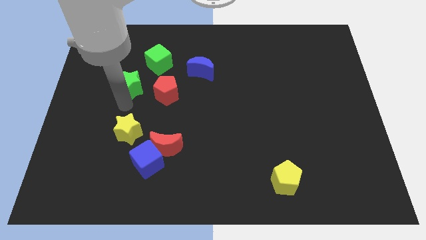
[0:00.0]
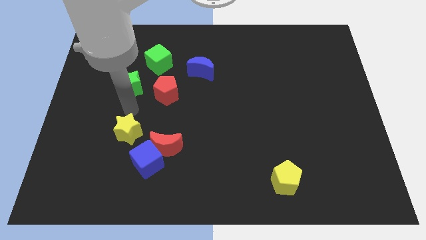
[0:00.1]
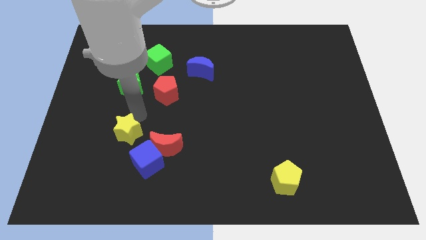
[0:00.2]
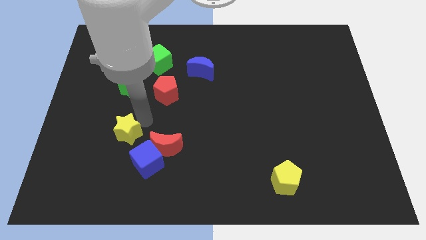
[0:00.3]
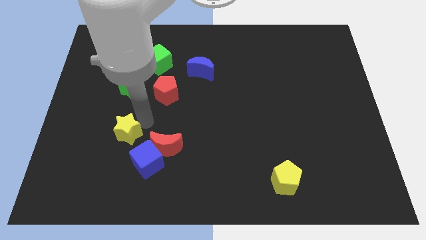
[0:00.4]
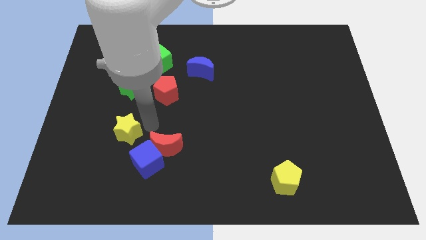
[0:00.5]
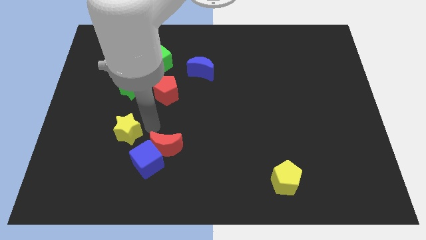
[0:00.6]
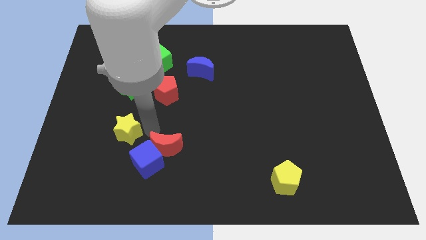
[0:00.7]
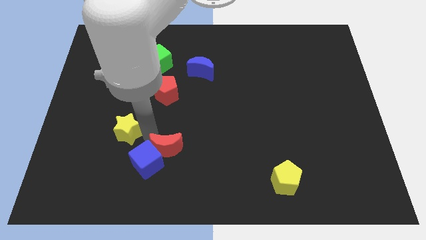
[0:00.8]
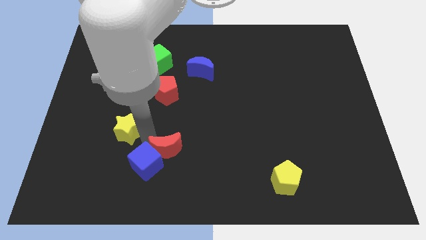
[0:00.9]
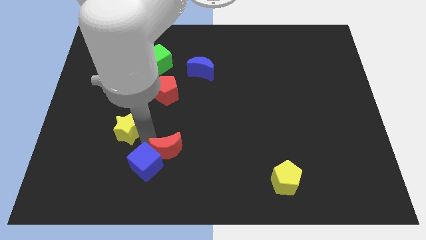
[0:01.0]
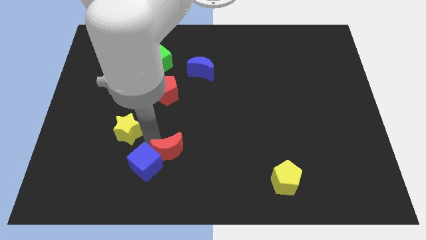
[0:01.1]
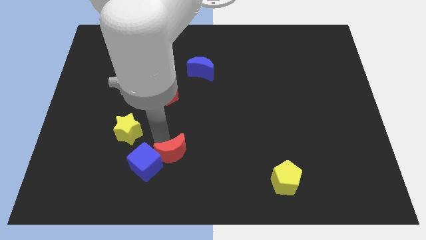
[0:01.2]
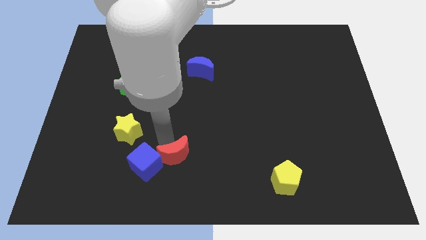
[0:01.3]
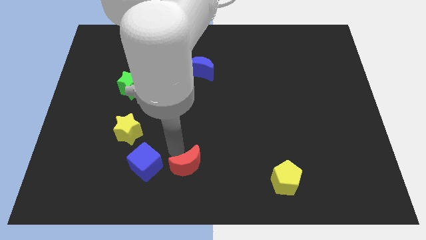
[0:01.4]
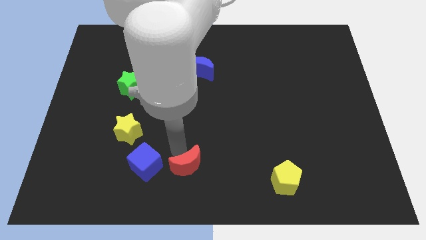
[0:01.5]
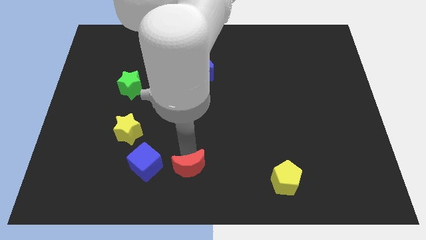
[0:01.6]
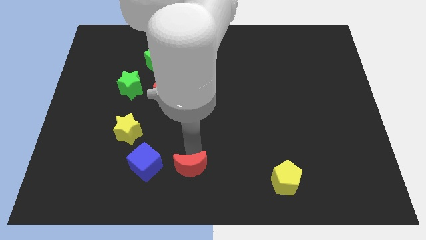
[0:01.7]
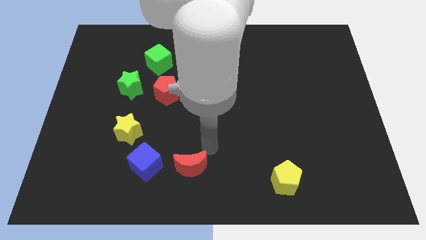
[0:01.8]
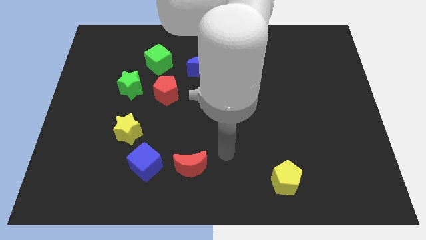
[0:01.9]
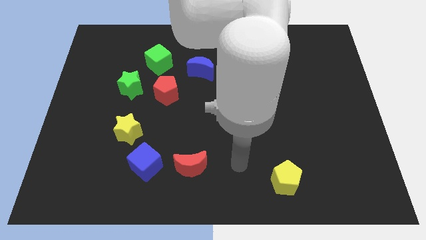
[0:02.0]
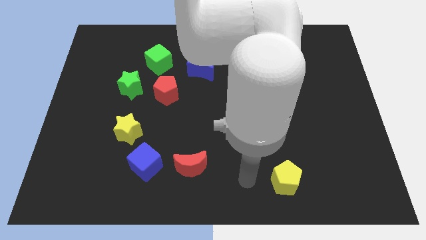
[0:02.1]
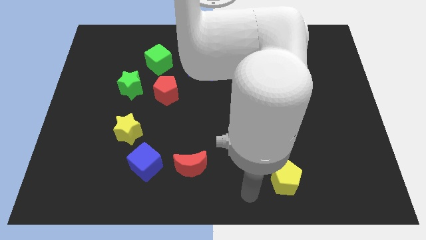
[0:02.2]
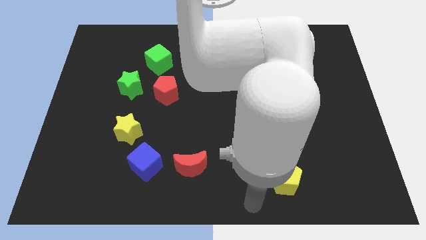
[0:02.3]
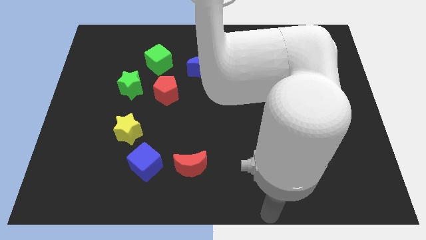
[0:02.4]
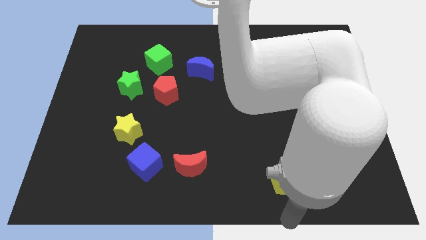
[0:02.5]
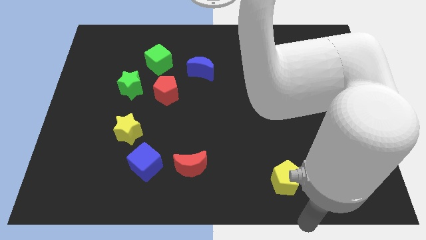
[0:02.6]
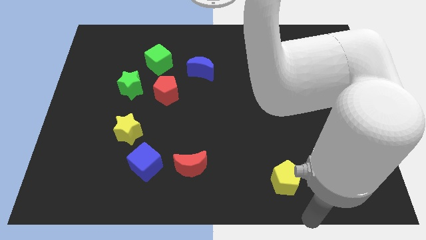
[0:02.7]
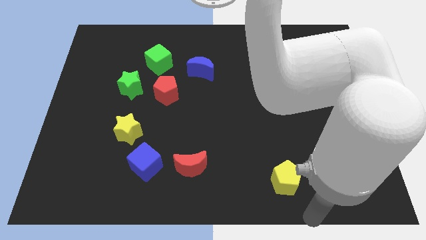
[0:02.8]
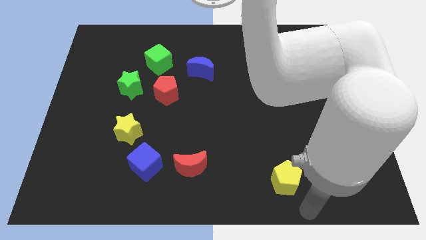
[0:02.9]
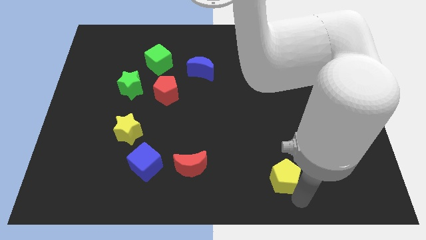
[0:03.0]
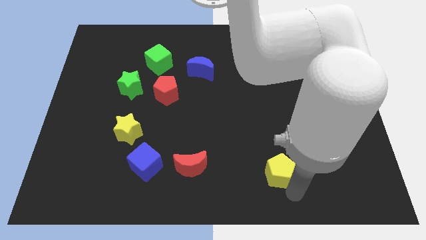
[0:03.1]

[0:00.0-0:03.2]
put the red crescent on the right side of the blue cube

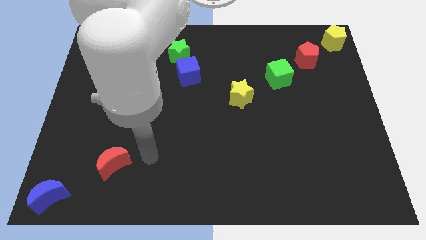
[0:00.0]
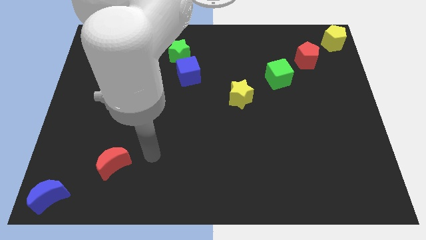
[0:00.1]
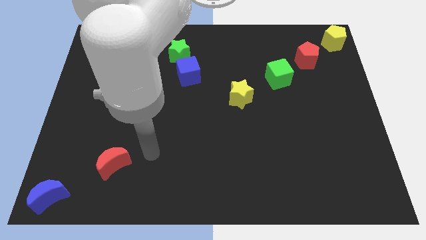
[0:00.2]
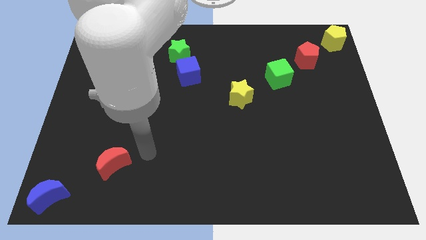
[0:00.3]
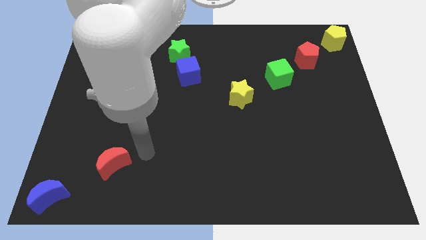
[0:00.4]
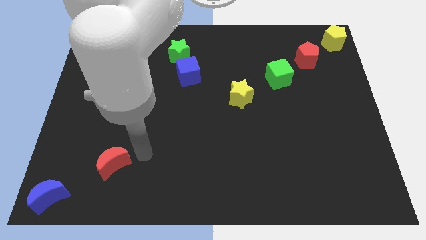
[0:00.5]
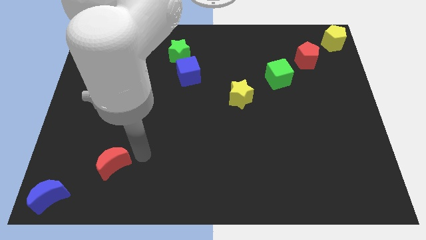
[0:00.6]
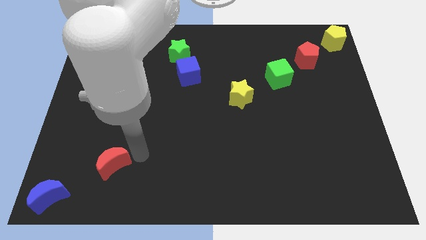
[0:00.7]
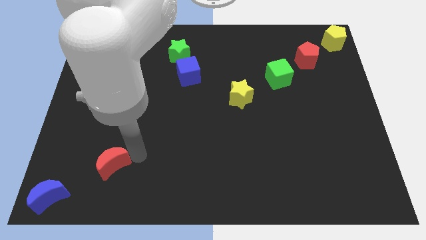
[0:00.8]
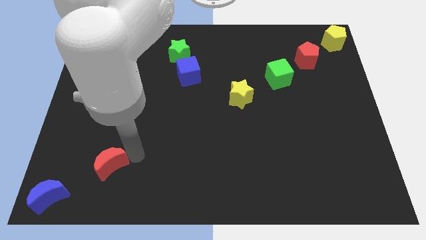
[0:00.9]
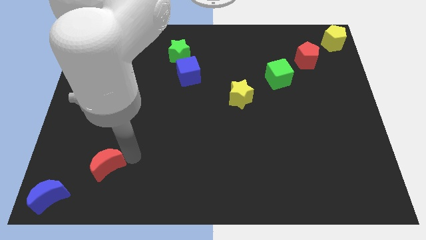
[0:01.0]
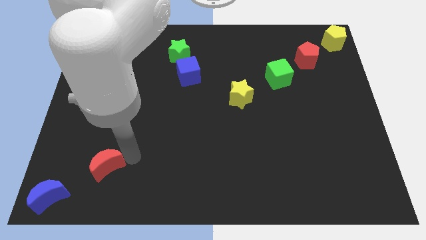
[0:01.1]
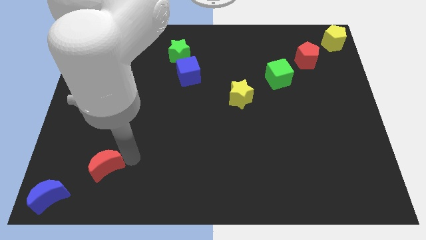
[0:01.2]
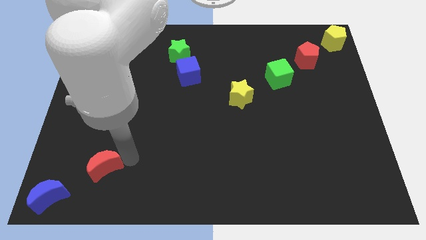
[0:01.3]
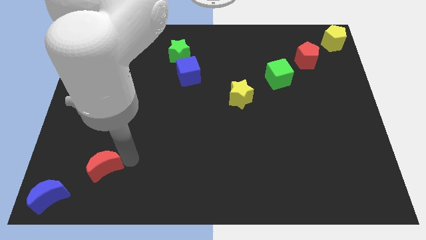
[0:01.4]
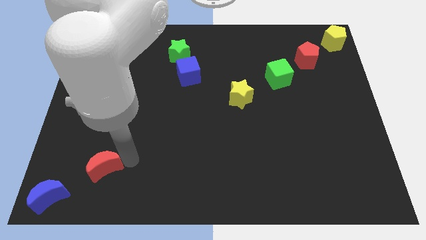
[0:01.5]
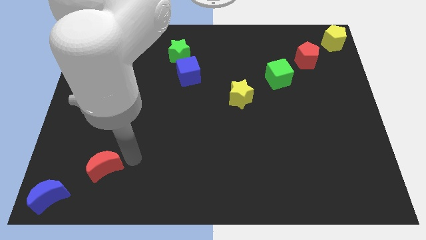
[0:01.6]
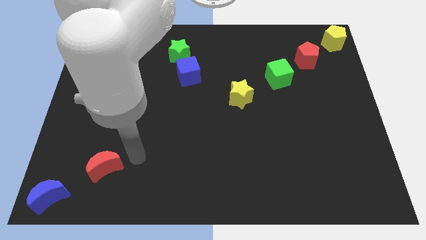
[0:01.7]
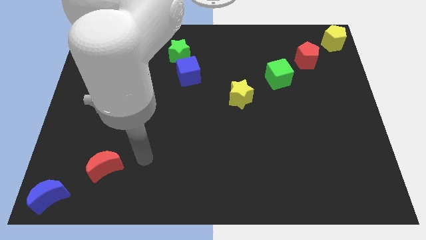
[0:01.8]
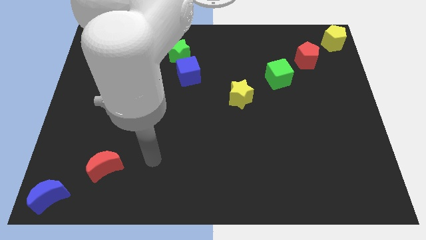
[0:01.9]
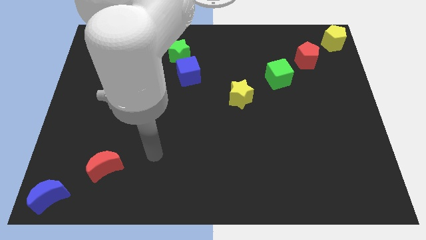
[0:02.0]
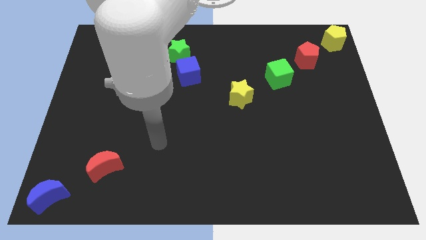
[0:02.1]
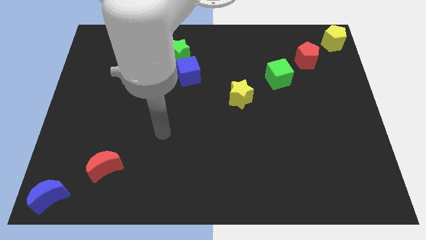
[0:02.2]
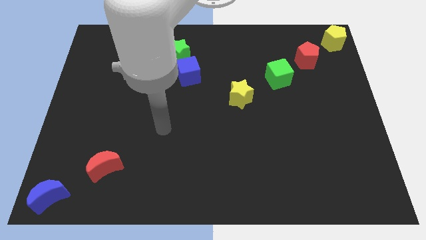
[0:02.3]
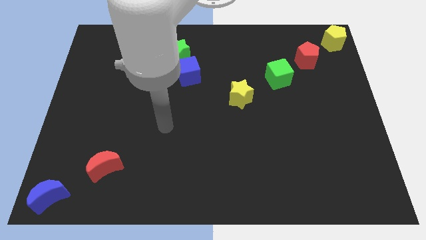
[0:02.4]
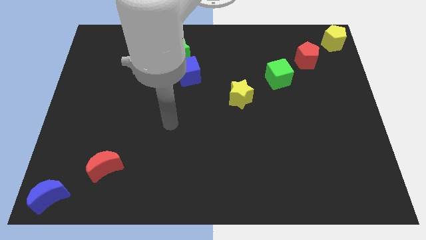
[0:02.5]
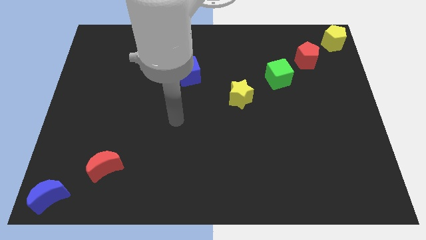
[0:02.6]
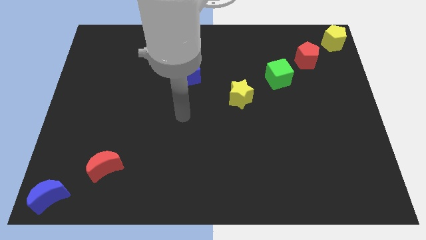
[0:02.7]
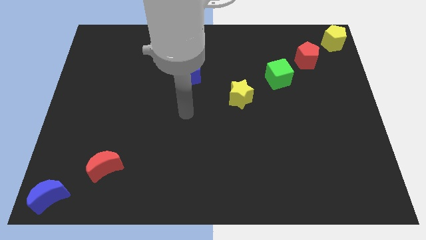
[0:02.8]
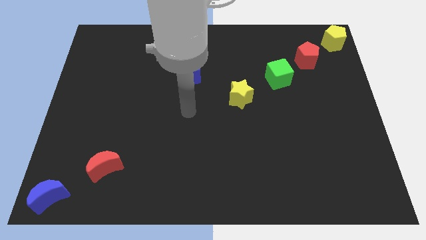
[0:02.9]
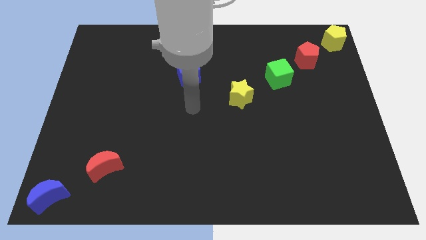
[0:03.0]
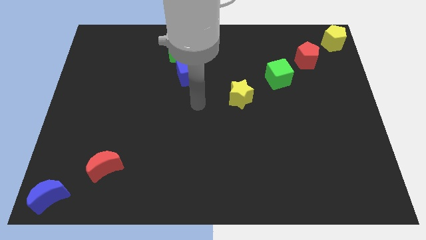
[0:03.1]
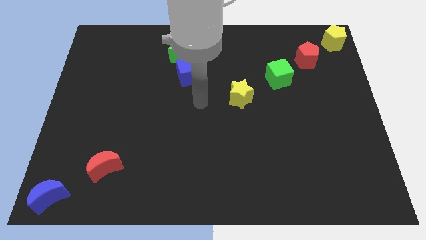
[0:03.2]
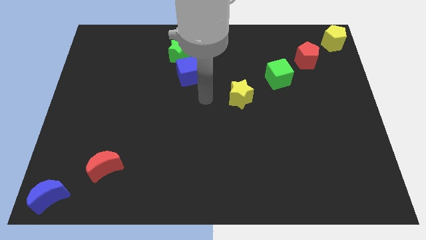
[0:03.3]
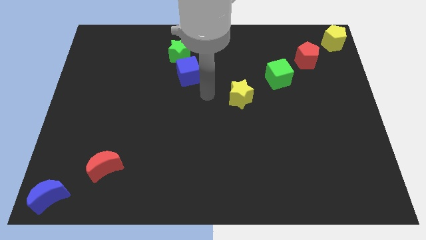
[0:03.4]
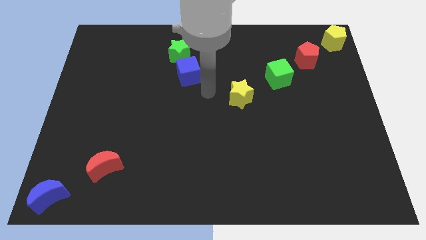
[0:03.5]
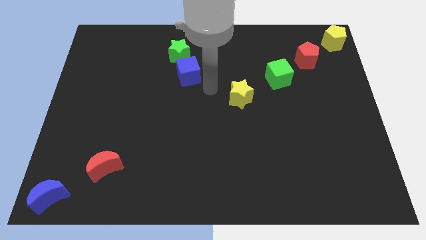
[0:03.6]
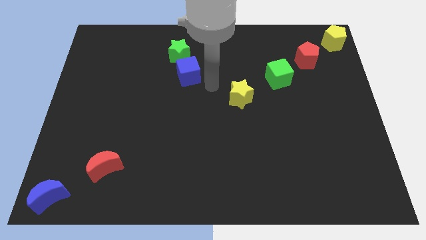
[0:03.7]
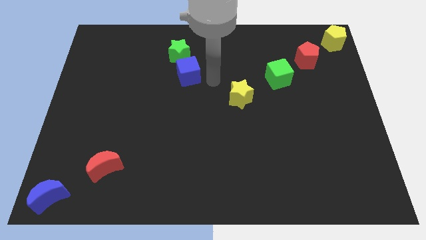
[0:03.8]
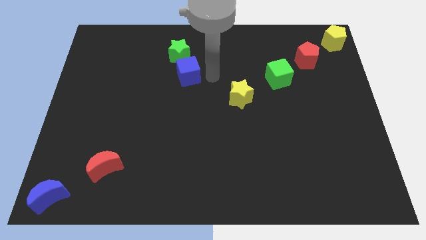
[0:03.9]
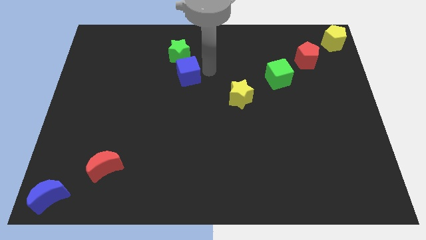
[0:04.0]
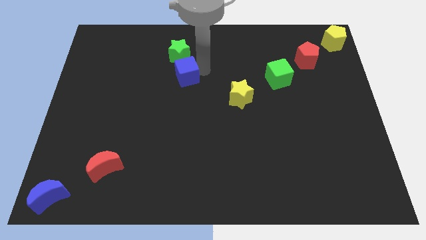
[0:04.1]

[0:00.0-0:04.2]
push the red crescent diagnolly to the blue crescent

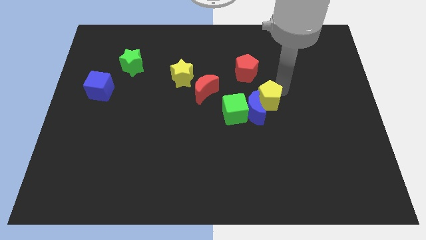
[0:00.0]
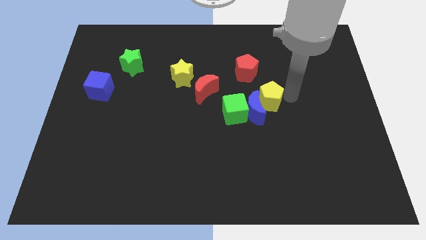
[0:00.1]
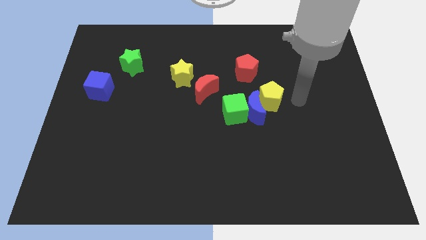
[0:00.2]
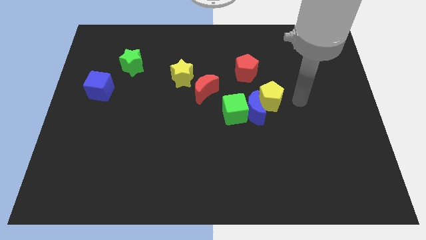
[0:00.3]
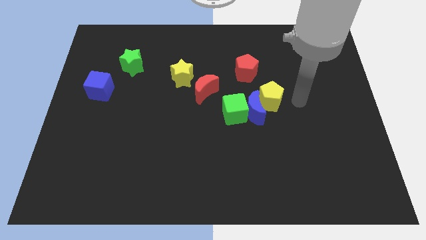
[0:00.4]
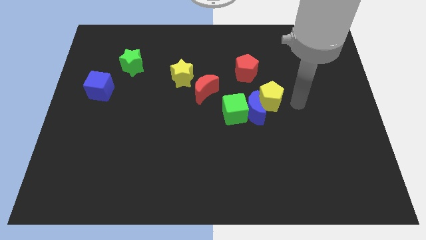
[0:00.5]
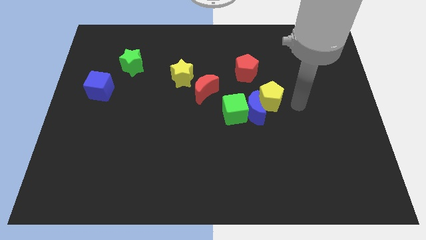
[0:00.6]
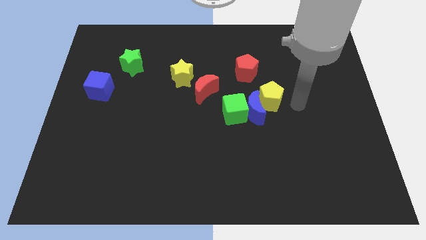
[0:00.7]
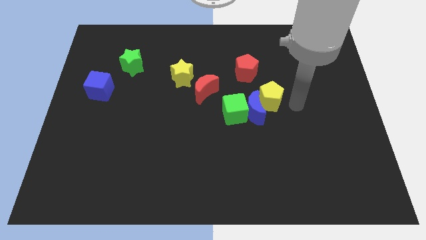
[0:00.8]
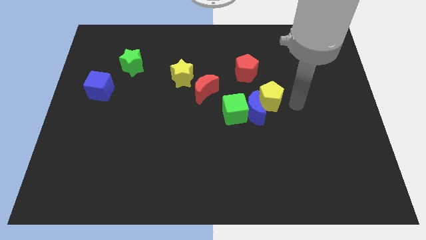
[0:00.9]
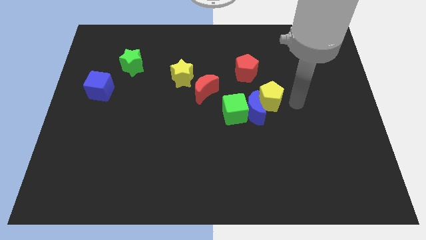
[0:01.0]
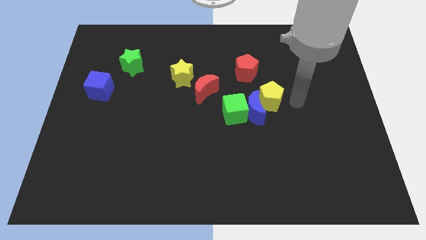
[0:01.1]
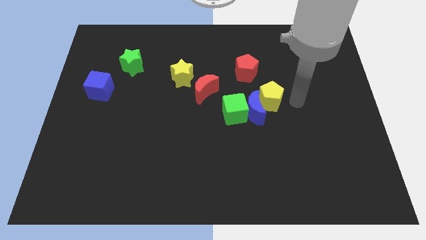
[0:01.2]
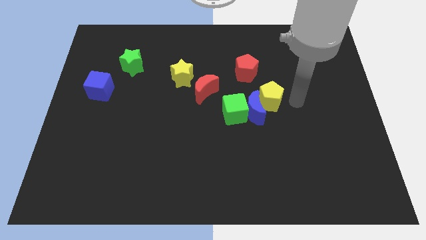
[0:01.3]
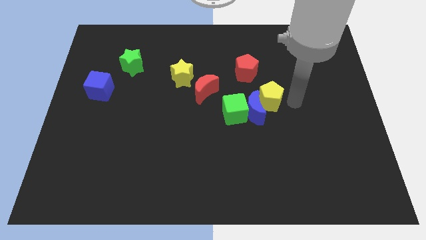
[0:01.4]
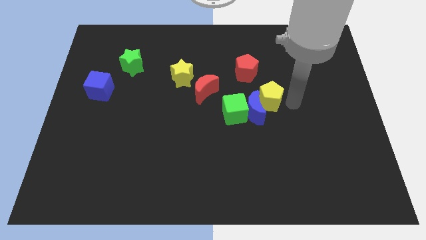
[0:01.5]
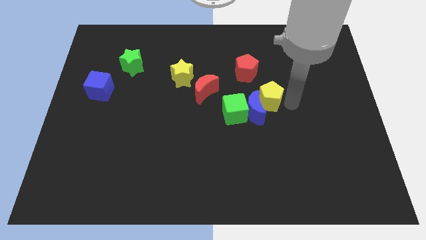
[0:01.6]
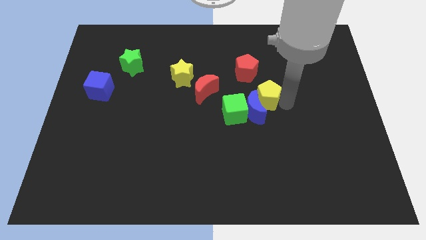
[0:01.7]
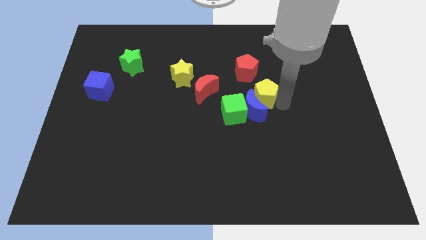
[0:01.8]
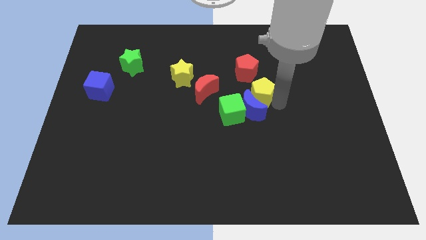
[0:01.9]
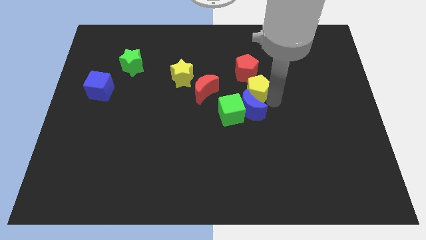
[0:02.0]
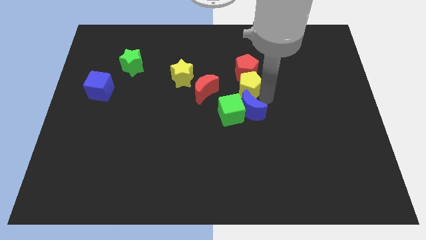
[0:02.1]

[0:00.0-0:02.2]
push yellow pentagon below red pentagon
